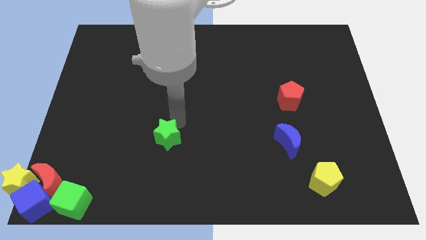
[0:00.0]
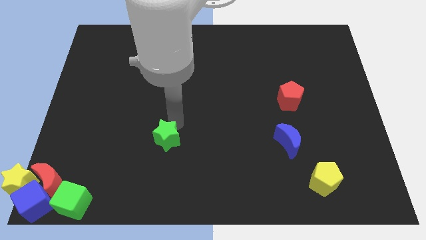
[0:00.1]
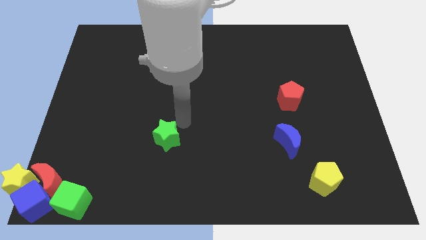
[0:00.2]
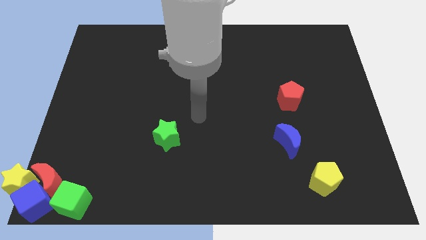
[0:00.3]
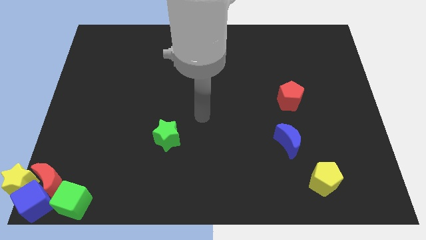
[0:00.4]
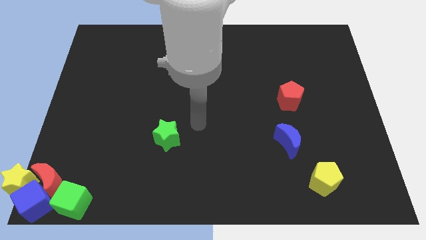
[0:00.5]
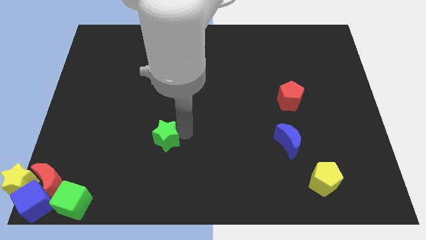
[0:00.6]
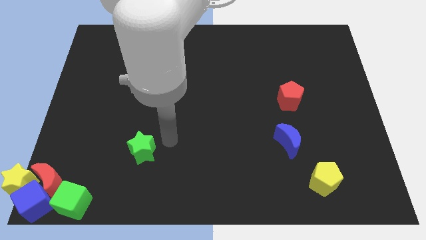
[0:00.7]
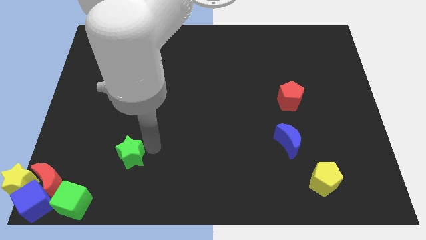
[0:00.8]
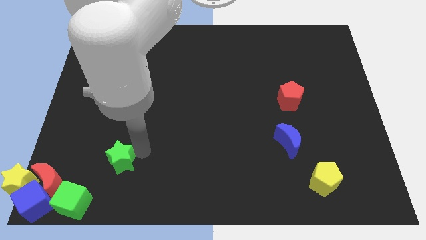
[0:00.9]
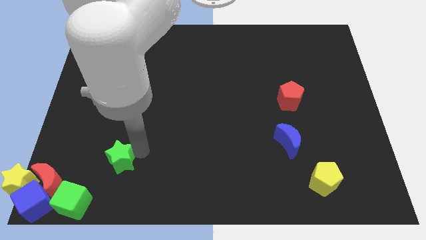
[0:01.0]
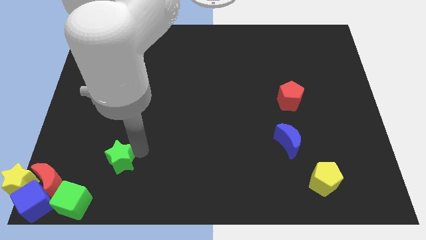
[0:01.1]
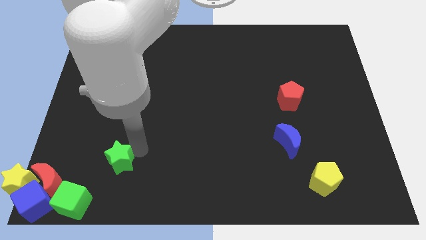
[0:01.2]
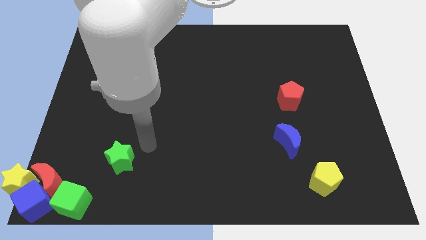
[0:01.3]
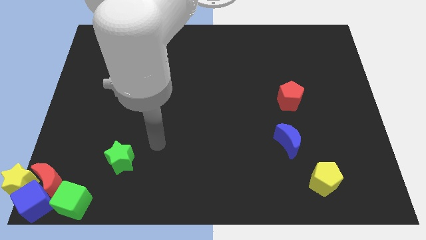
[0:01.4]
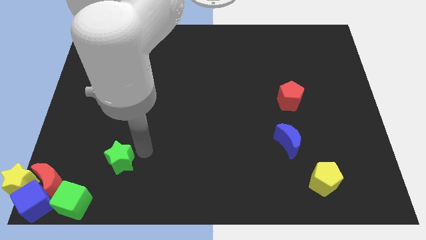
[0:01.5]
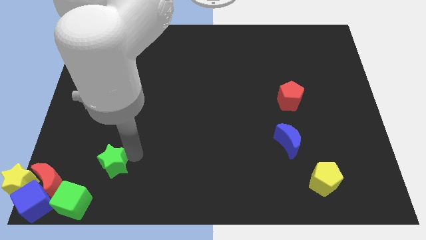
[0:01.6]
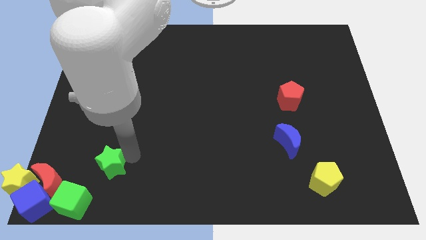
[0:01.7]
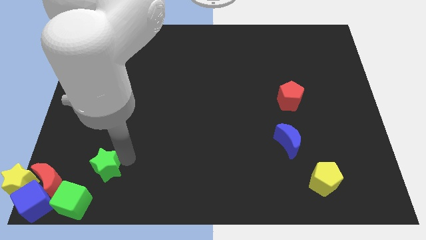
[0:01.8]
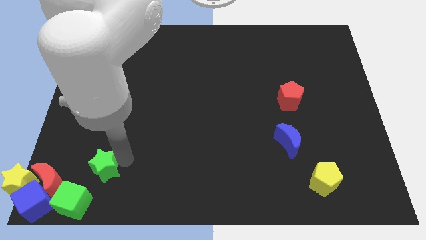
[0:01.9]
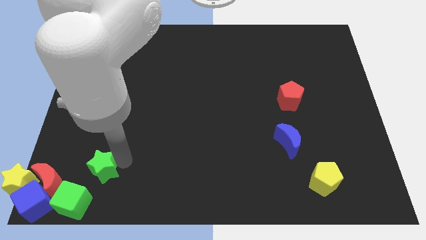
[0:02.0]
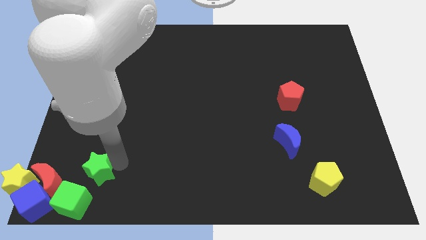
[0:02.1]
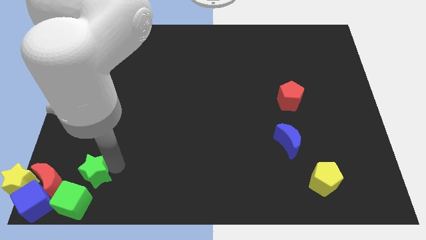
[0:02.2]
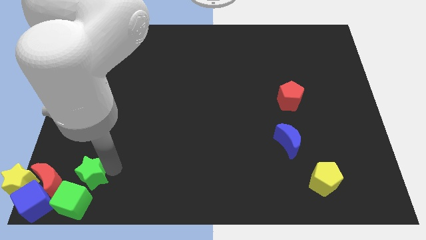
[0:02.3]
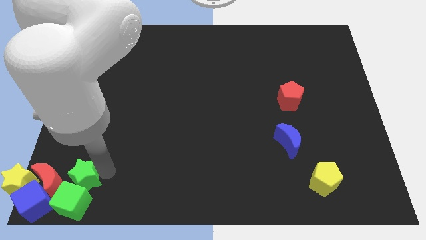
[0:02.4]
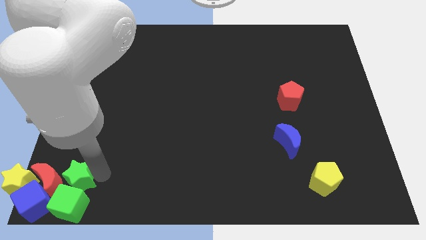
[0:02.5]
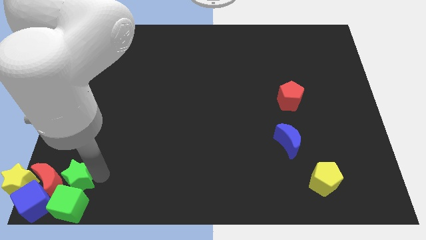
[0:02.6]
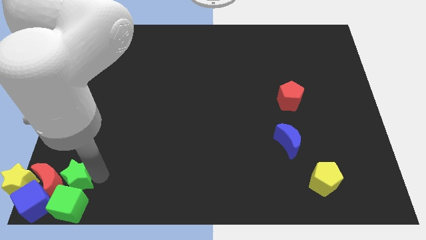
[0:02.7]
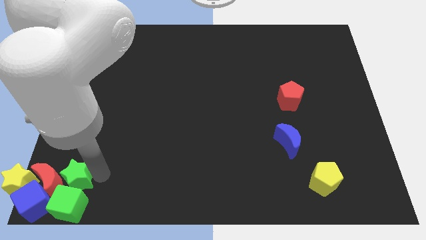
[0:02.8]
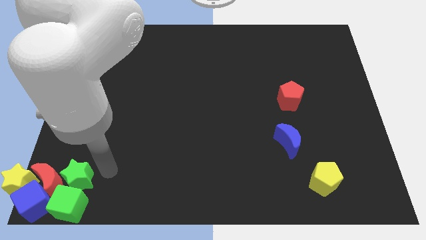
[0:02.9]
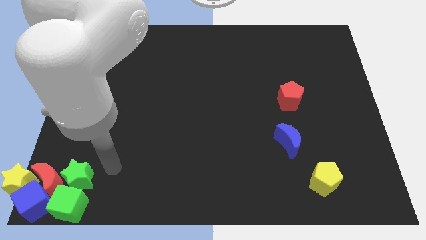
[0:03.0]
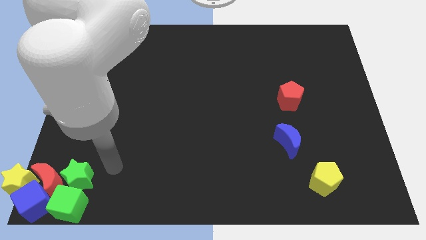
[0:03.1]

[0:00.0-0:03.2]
place the green star above the green cube

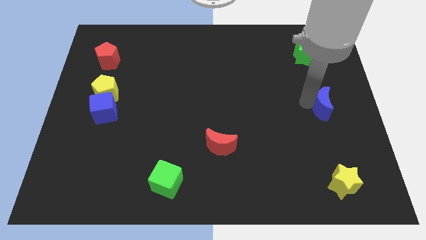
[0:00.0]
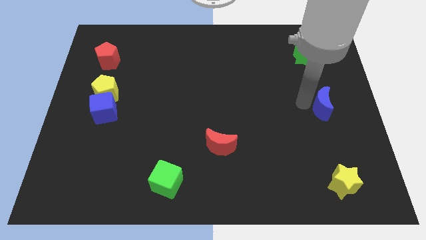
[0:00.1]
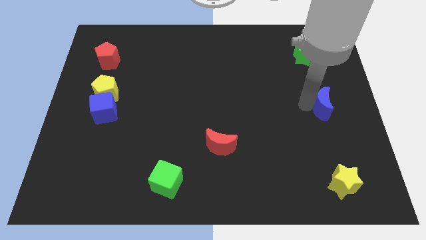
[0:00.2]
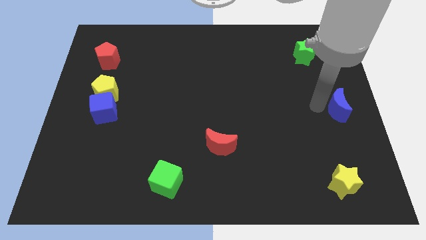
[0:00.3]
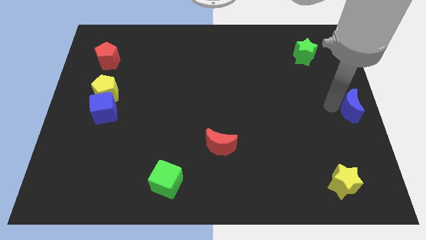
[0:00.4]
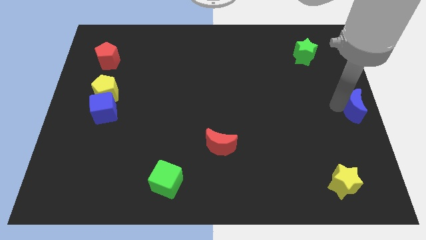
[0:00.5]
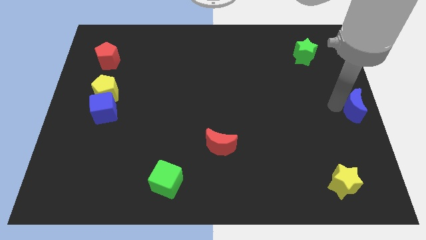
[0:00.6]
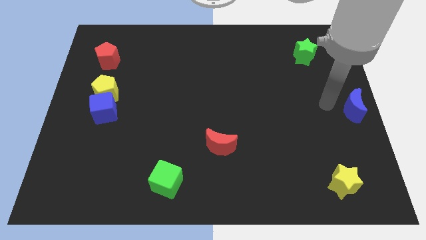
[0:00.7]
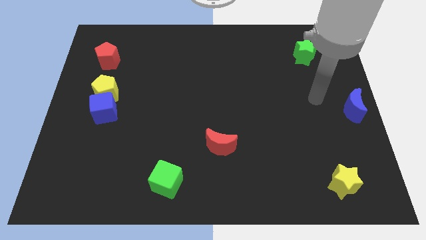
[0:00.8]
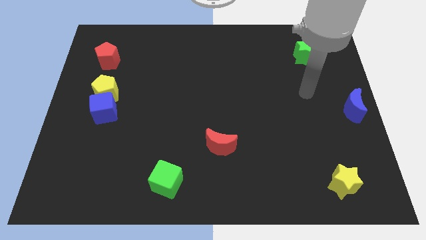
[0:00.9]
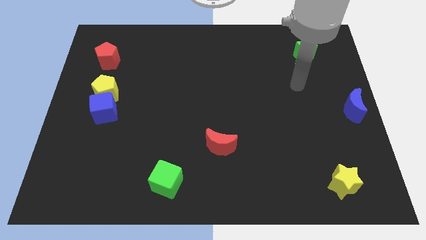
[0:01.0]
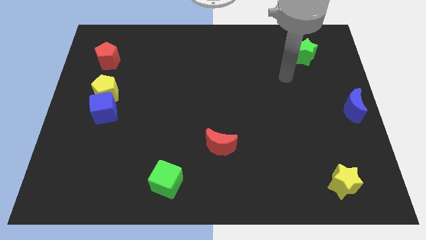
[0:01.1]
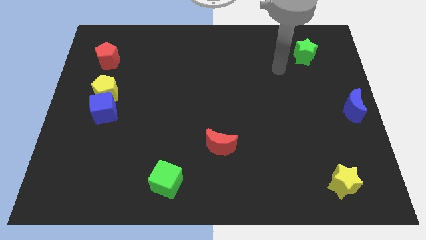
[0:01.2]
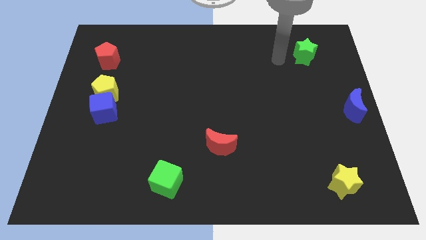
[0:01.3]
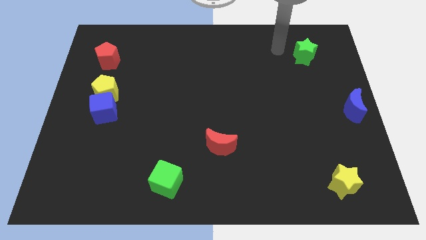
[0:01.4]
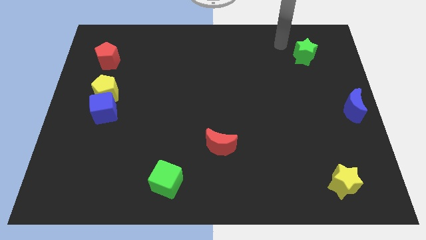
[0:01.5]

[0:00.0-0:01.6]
move the blue moon to the center right

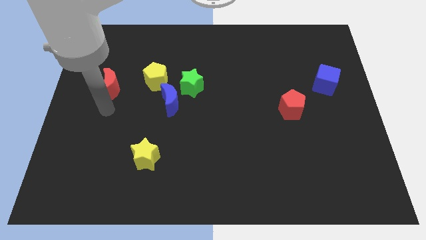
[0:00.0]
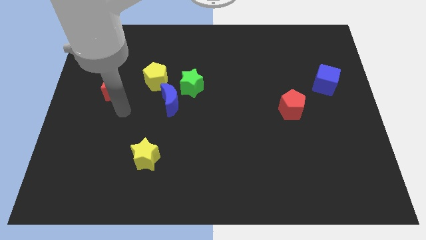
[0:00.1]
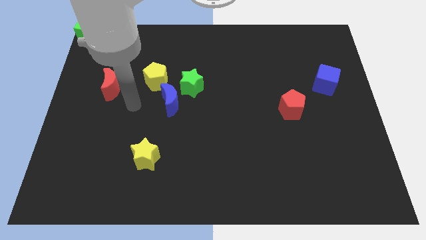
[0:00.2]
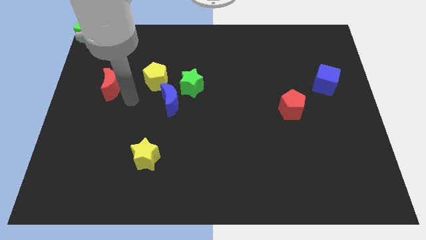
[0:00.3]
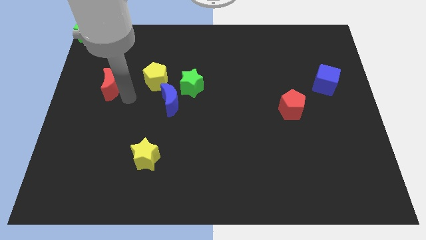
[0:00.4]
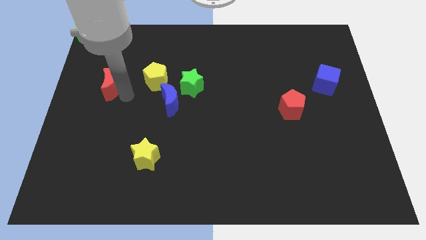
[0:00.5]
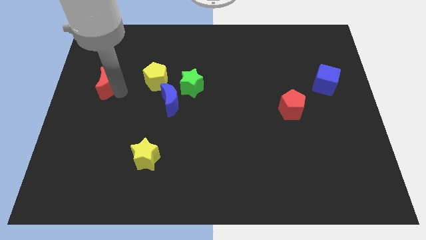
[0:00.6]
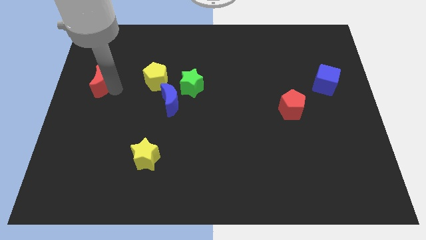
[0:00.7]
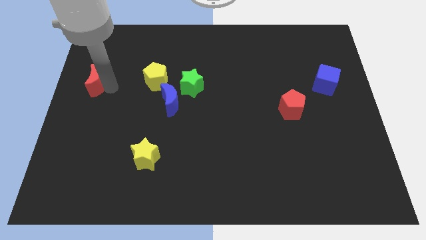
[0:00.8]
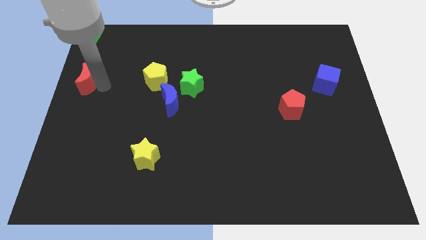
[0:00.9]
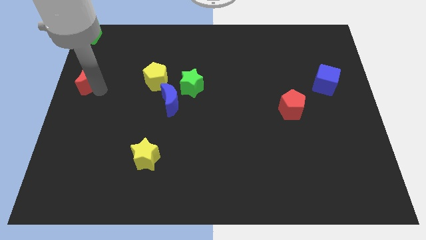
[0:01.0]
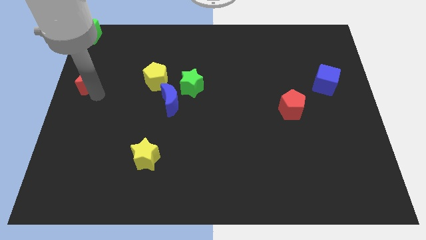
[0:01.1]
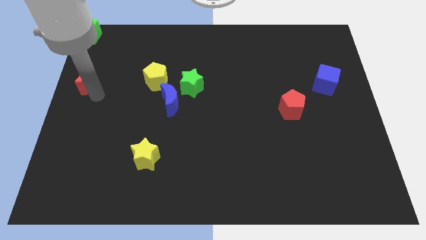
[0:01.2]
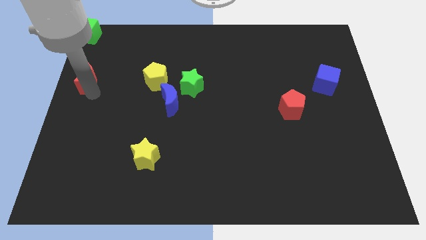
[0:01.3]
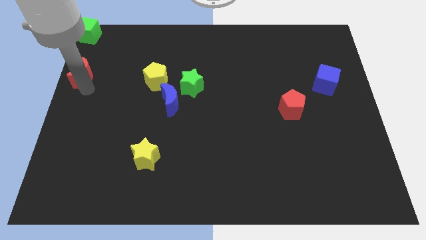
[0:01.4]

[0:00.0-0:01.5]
move the red moon to the center left

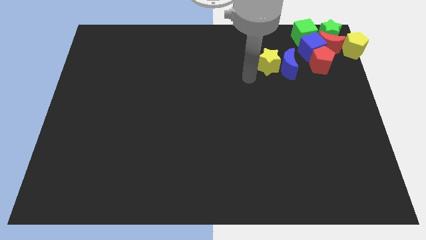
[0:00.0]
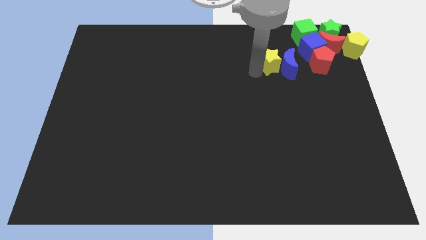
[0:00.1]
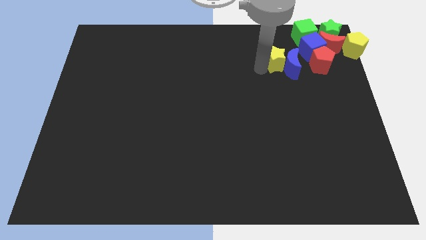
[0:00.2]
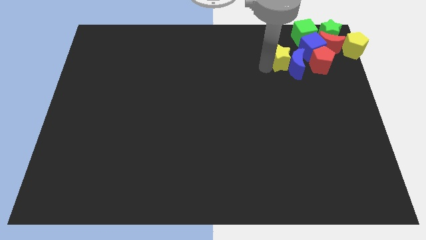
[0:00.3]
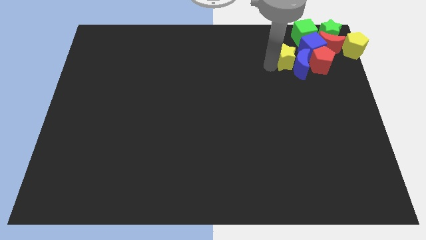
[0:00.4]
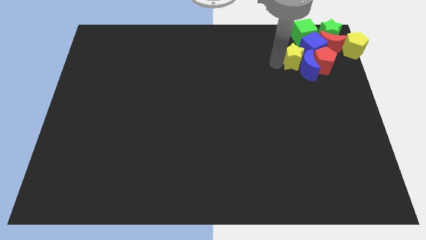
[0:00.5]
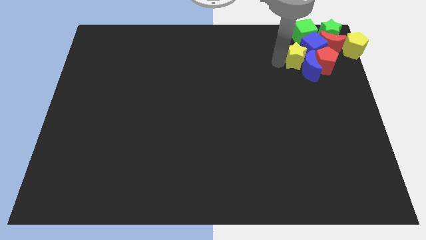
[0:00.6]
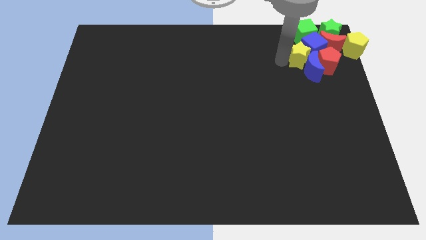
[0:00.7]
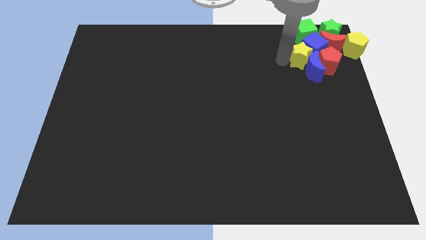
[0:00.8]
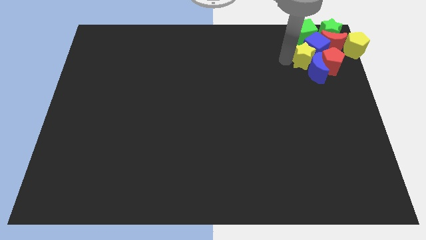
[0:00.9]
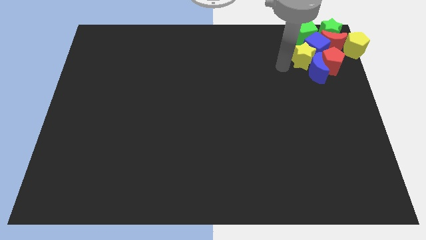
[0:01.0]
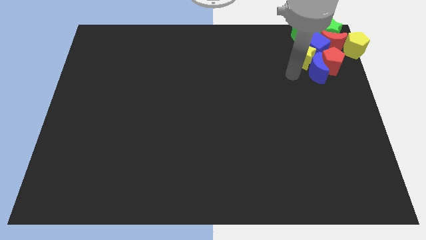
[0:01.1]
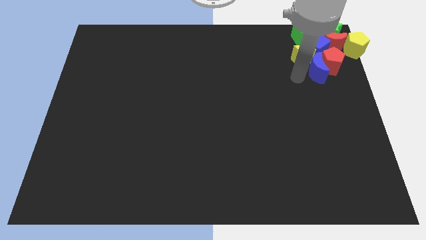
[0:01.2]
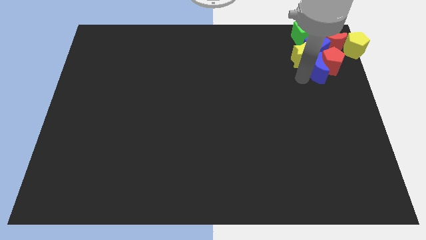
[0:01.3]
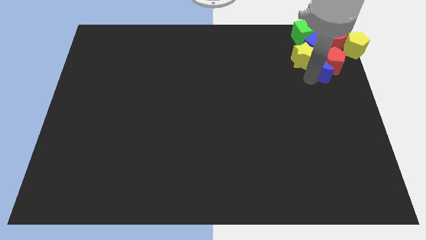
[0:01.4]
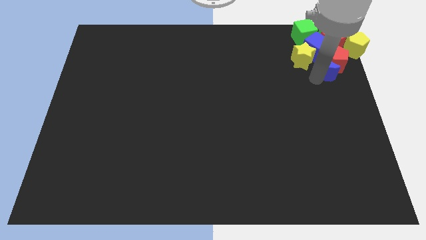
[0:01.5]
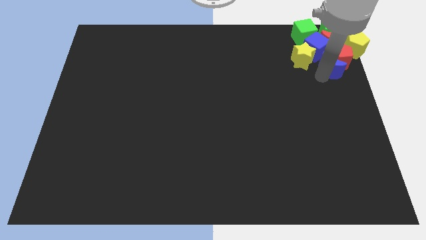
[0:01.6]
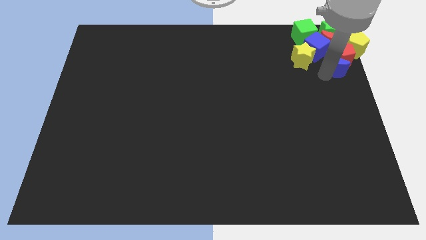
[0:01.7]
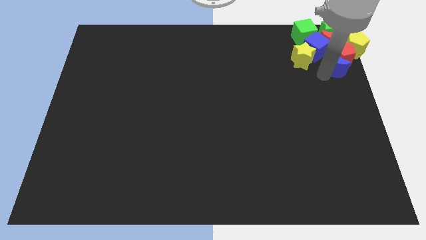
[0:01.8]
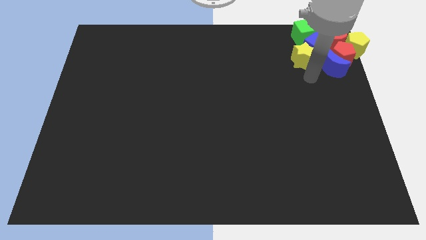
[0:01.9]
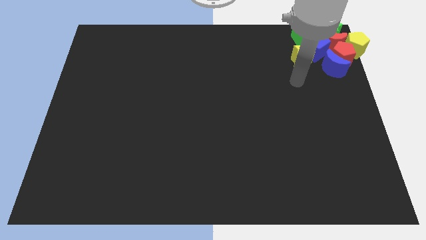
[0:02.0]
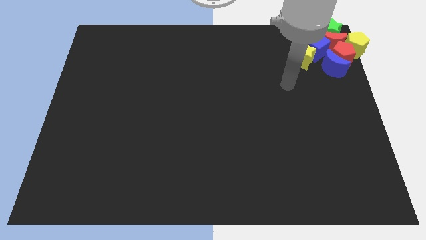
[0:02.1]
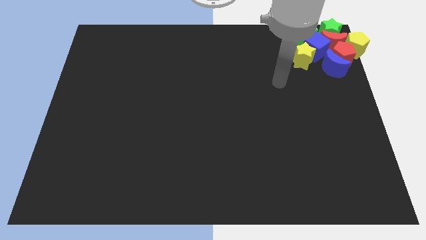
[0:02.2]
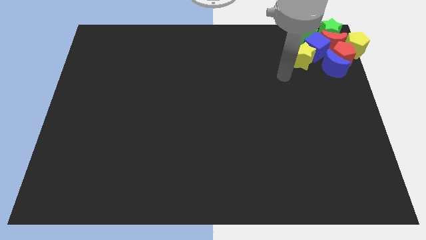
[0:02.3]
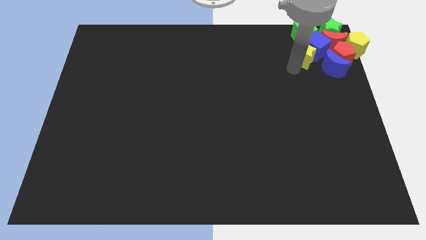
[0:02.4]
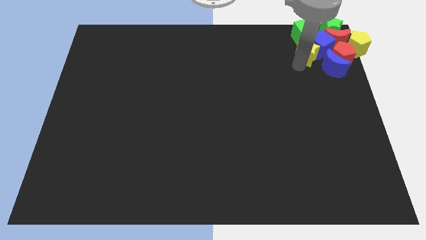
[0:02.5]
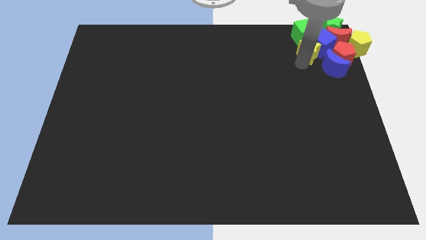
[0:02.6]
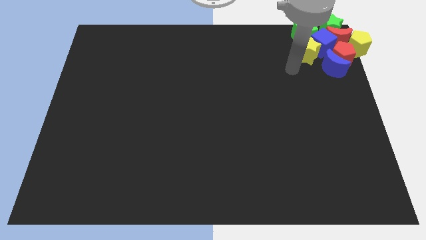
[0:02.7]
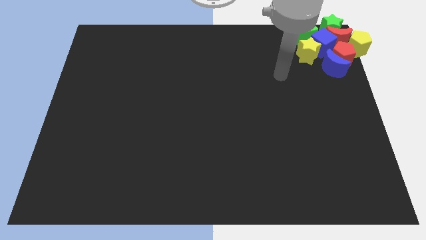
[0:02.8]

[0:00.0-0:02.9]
push the yellow star and blue moon into the group of blocks
